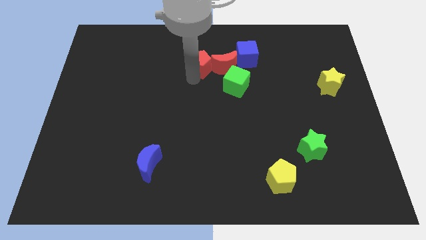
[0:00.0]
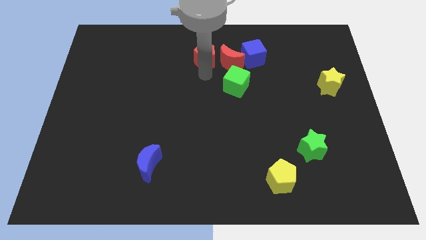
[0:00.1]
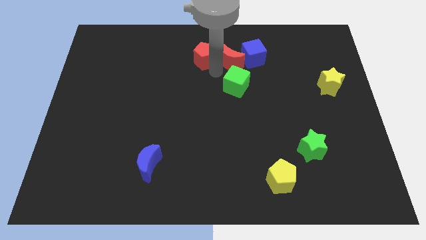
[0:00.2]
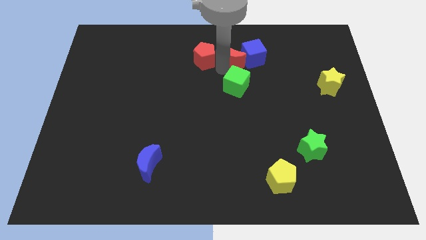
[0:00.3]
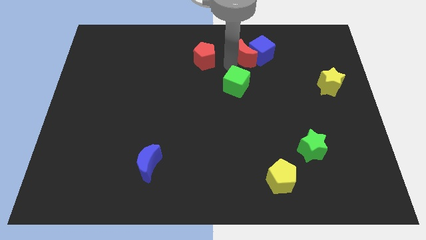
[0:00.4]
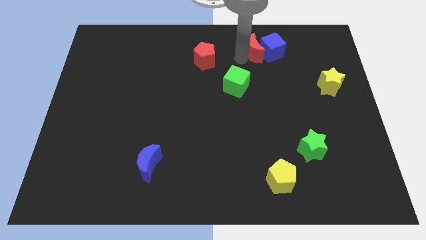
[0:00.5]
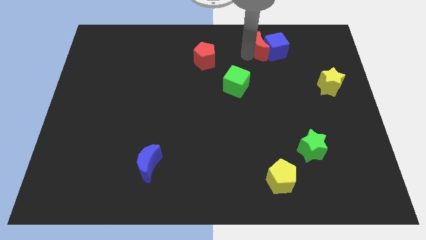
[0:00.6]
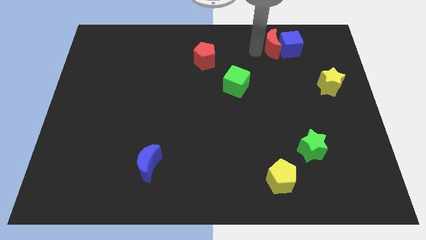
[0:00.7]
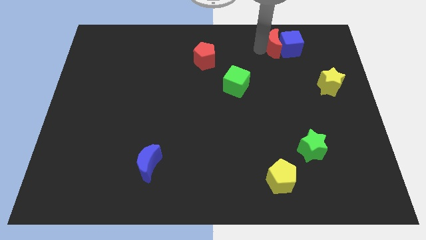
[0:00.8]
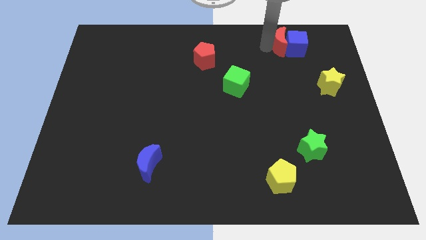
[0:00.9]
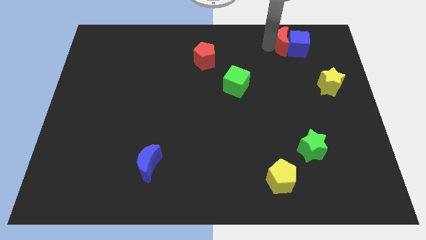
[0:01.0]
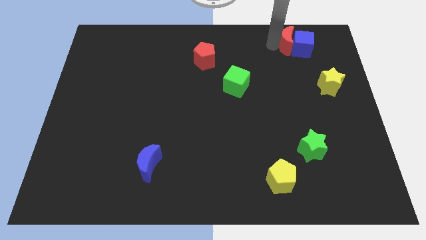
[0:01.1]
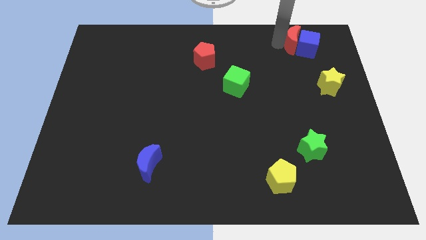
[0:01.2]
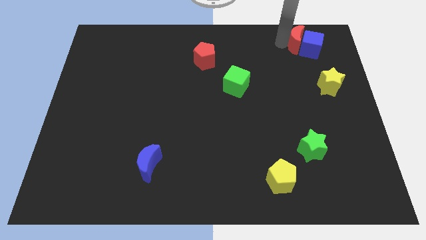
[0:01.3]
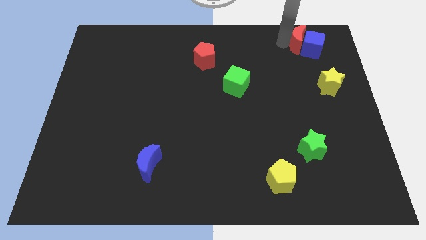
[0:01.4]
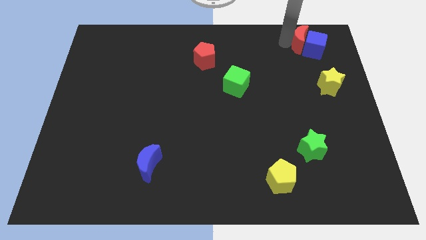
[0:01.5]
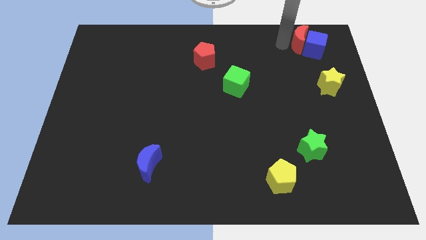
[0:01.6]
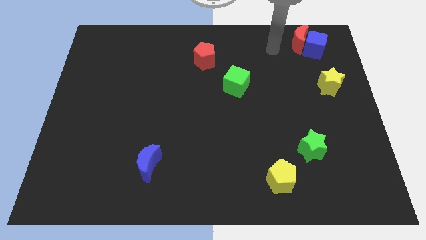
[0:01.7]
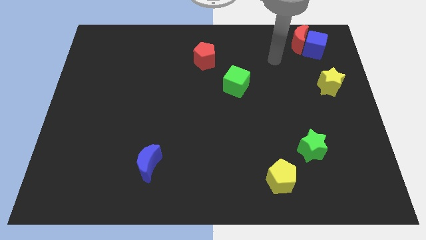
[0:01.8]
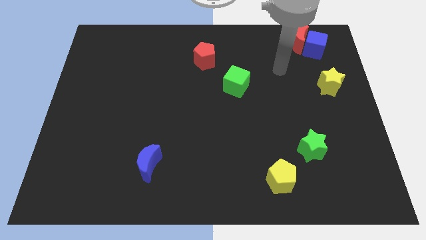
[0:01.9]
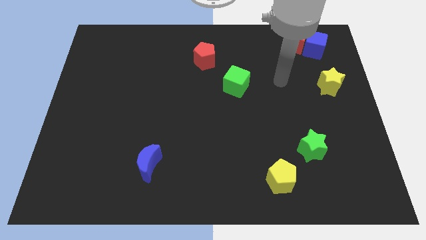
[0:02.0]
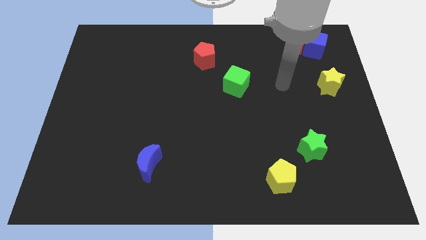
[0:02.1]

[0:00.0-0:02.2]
separate red pentagon from red moon and blue cube

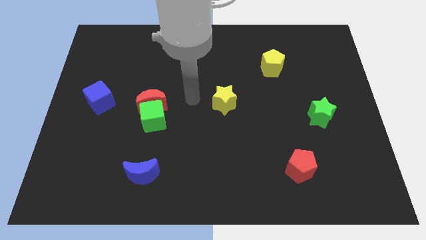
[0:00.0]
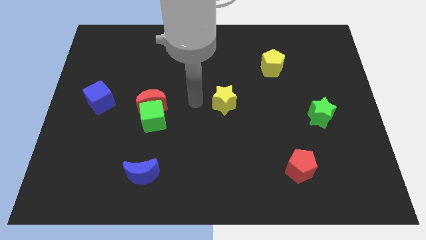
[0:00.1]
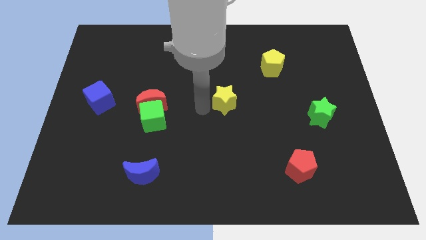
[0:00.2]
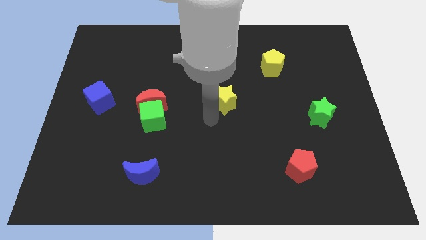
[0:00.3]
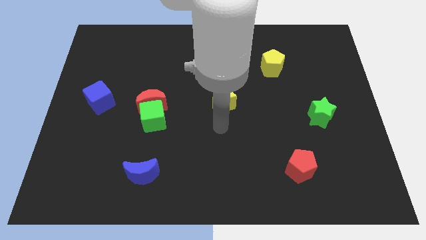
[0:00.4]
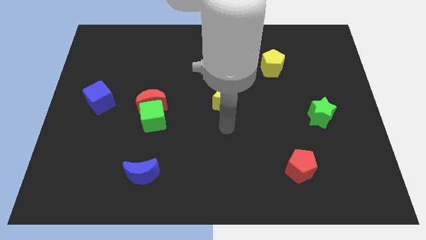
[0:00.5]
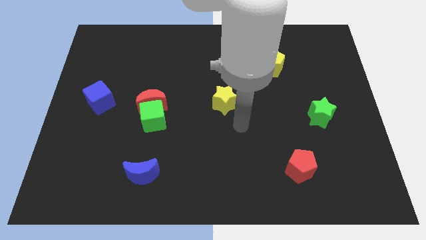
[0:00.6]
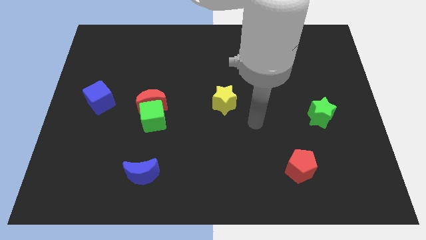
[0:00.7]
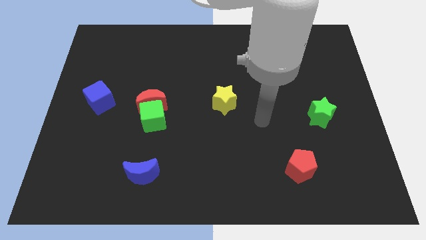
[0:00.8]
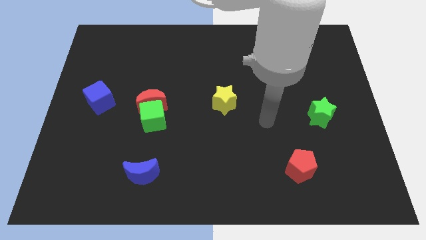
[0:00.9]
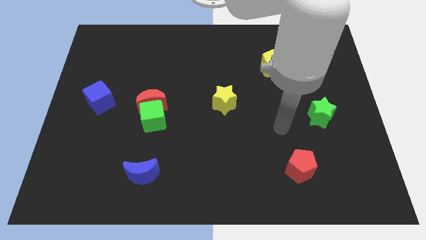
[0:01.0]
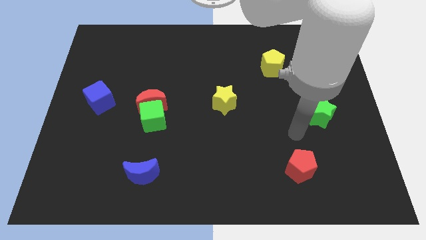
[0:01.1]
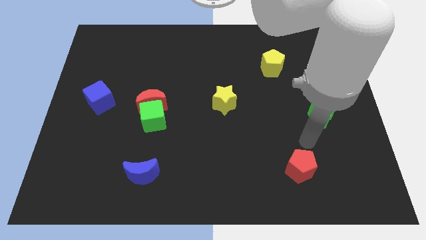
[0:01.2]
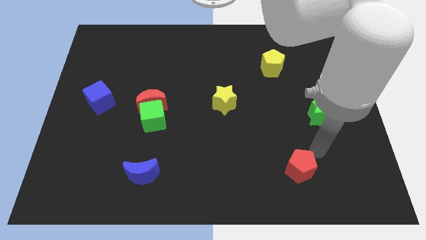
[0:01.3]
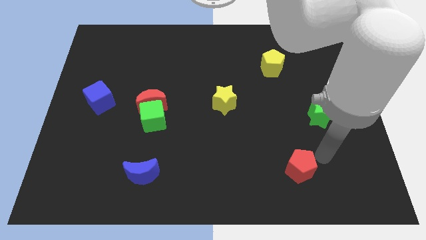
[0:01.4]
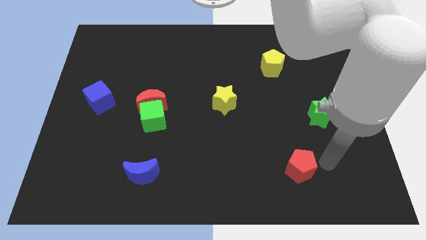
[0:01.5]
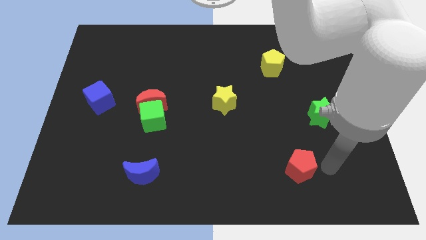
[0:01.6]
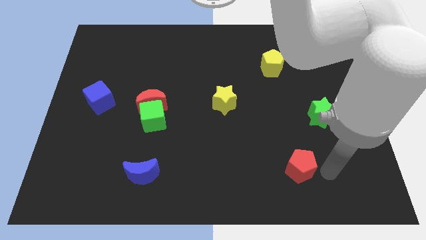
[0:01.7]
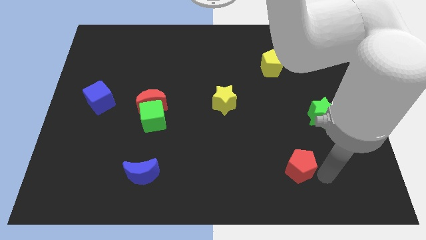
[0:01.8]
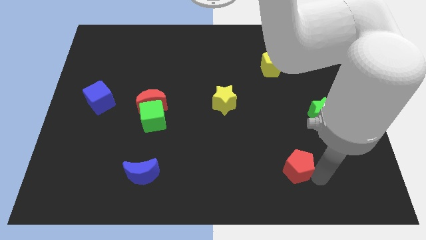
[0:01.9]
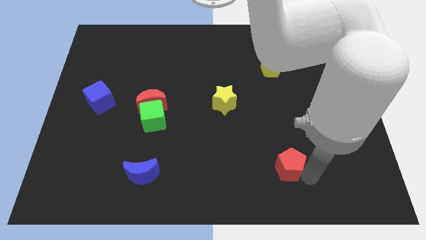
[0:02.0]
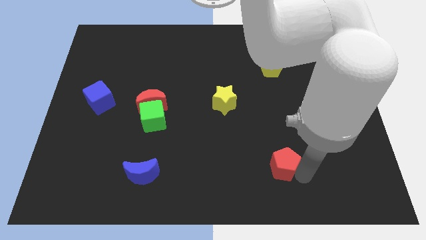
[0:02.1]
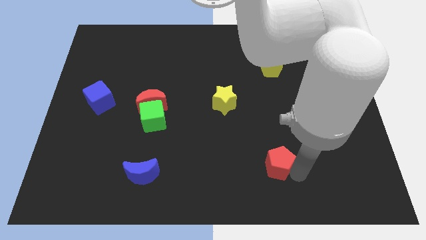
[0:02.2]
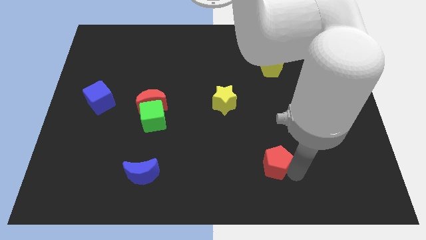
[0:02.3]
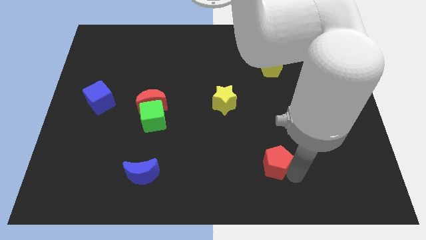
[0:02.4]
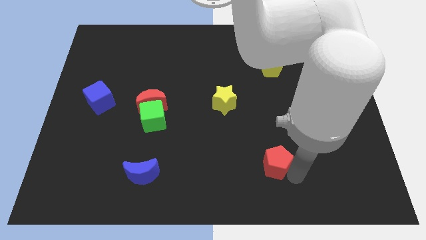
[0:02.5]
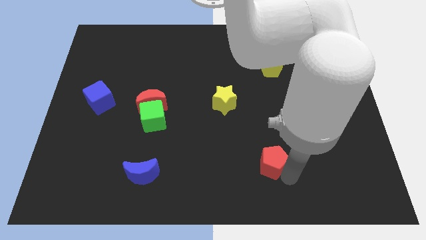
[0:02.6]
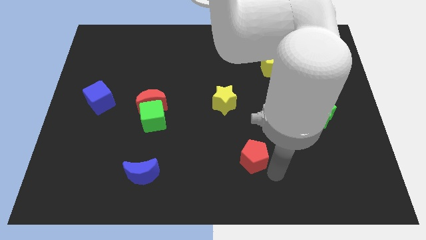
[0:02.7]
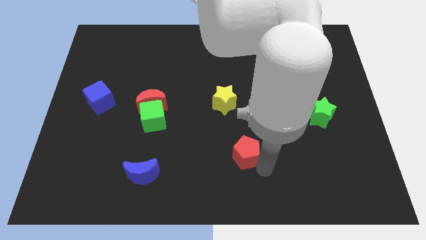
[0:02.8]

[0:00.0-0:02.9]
push the red pentagon diagonally to green cube

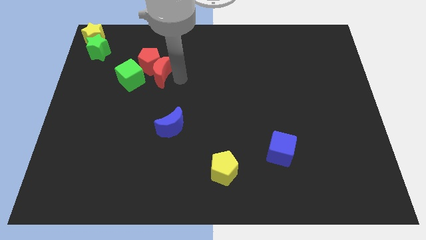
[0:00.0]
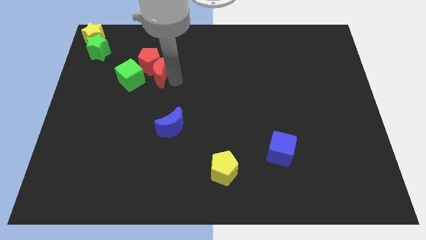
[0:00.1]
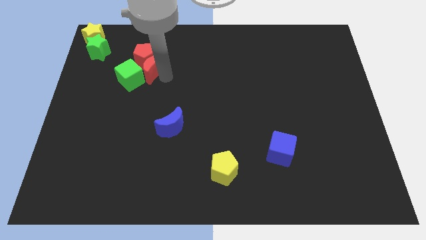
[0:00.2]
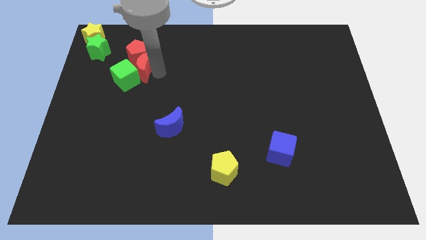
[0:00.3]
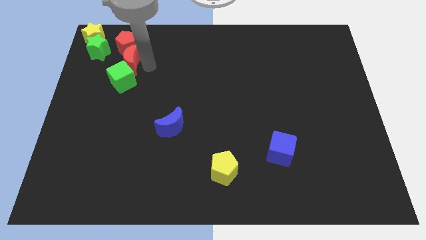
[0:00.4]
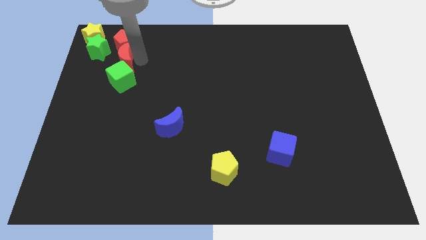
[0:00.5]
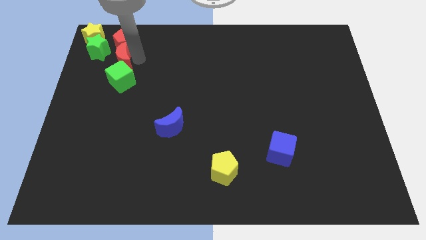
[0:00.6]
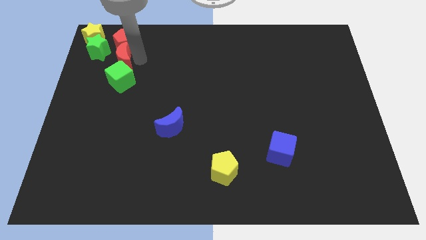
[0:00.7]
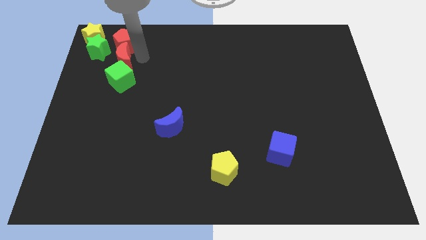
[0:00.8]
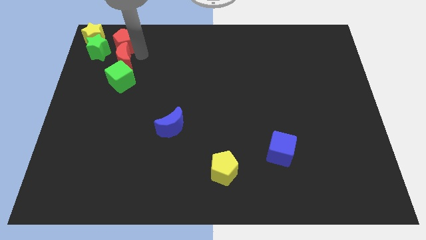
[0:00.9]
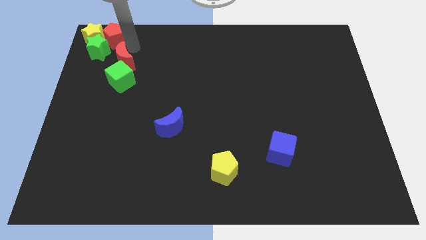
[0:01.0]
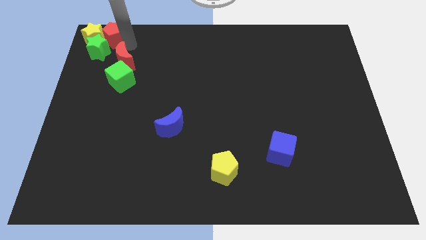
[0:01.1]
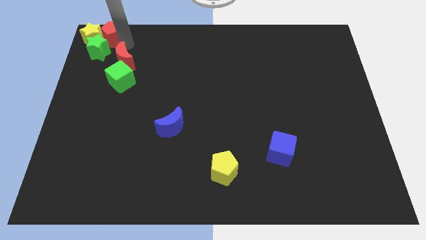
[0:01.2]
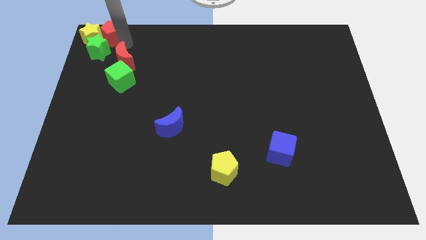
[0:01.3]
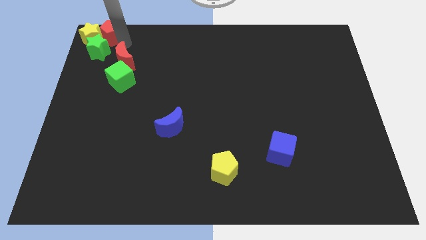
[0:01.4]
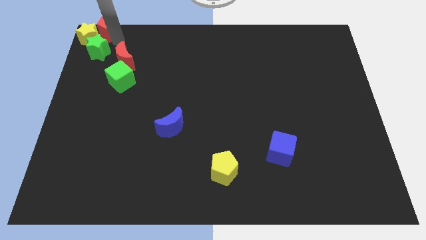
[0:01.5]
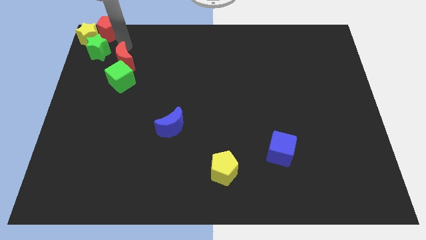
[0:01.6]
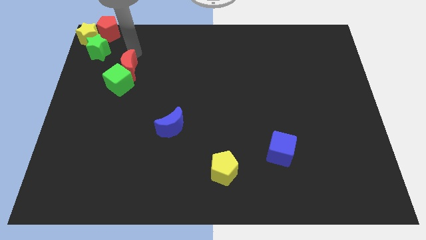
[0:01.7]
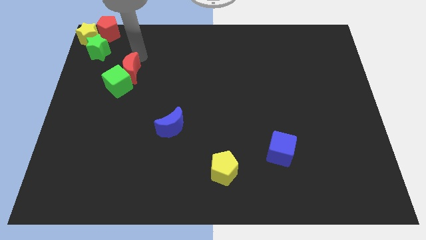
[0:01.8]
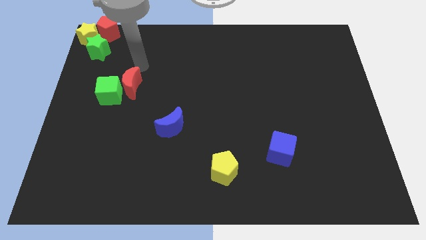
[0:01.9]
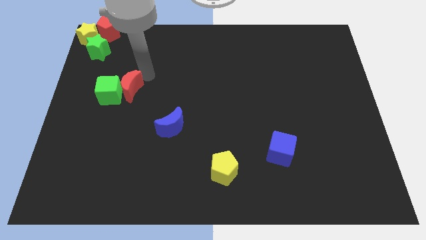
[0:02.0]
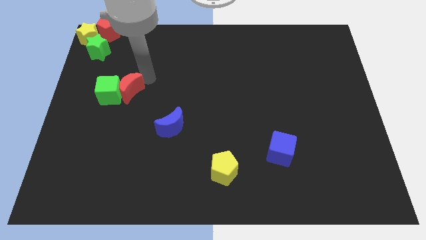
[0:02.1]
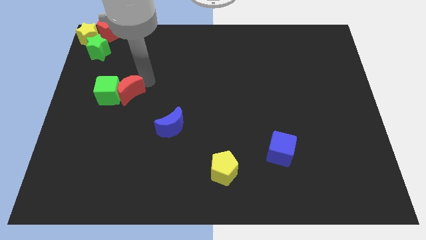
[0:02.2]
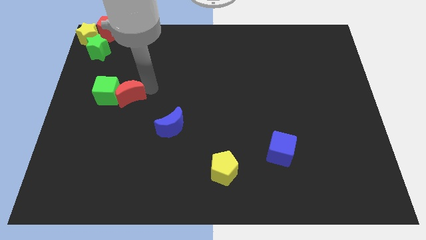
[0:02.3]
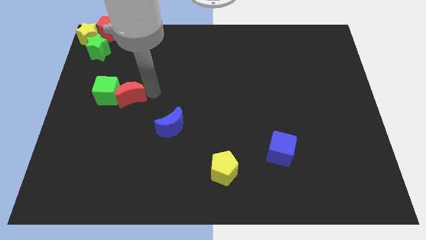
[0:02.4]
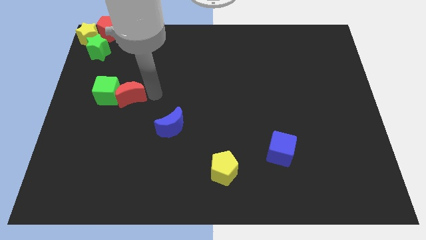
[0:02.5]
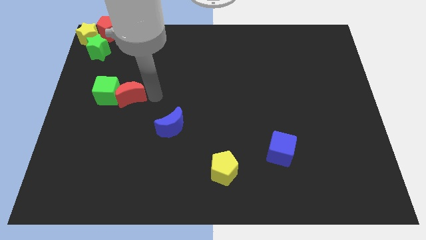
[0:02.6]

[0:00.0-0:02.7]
separate the red pentagon and red block

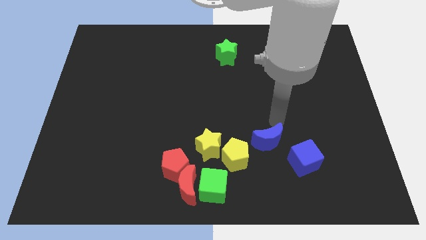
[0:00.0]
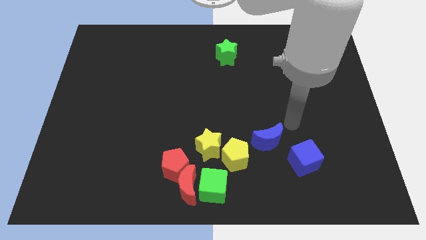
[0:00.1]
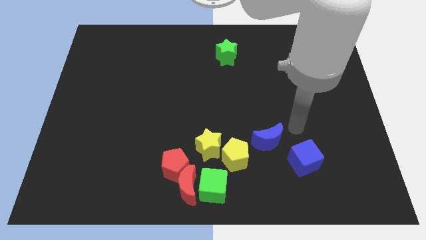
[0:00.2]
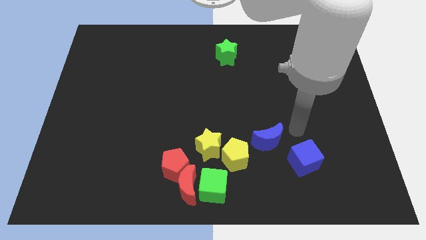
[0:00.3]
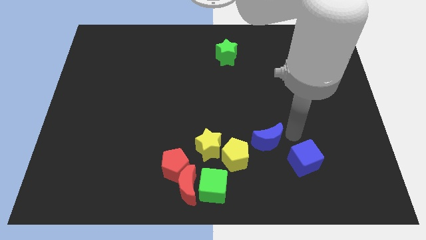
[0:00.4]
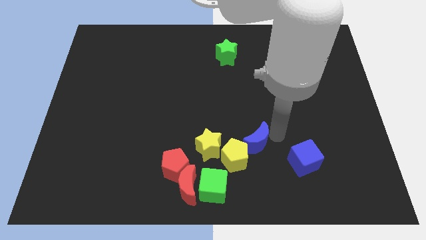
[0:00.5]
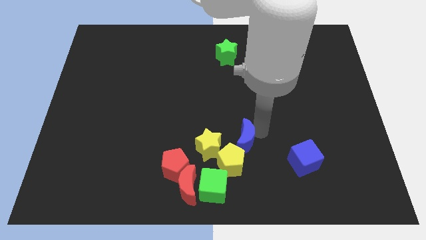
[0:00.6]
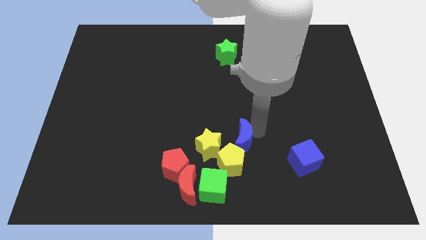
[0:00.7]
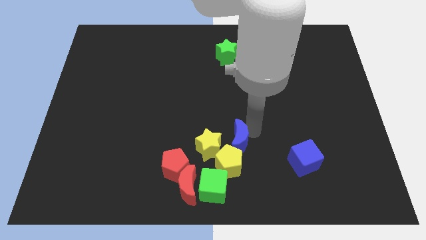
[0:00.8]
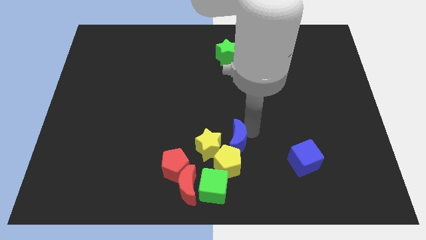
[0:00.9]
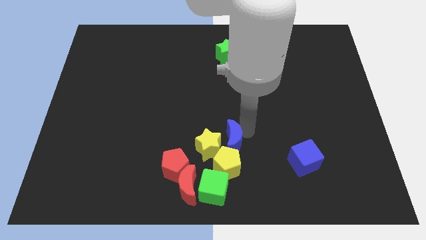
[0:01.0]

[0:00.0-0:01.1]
put the blue moon diagonally top right to yellow pentagon

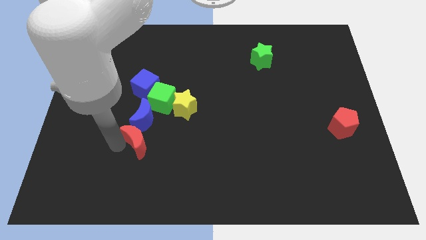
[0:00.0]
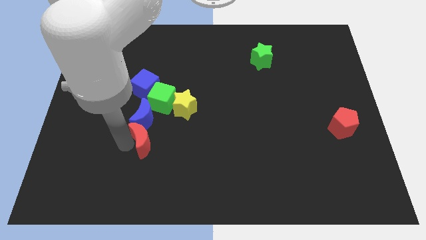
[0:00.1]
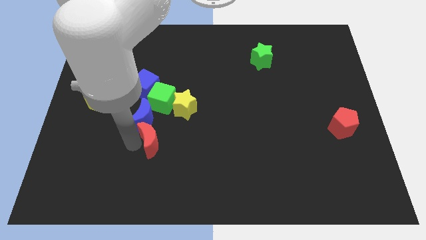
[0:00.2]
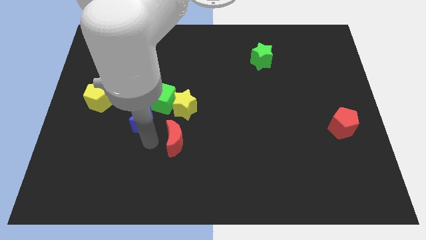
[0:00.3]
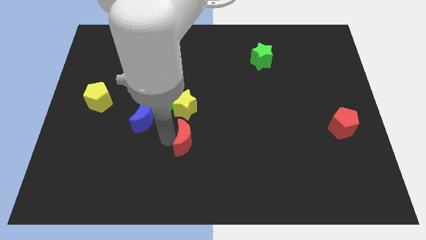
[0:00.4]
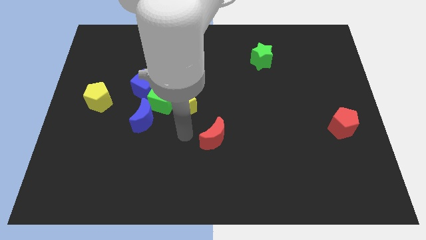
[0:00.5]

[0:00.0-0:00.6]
push red crescent below yellow star
